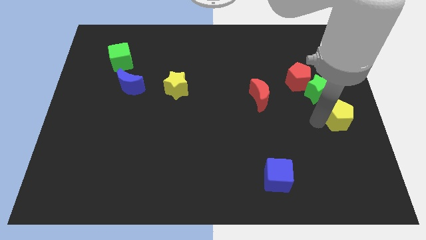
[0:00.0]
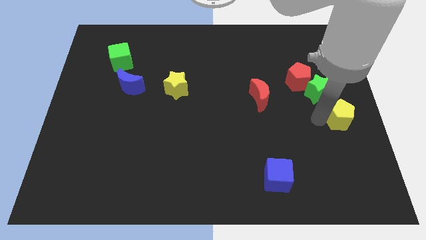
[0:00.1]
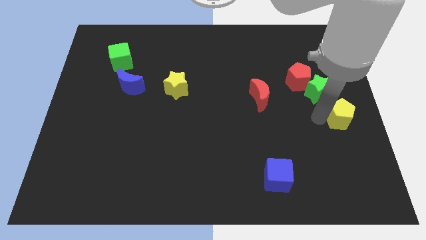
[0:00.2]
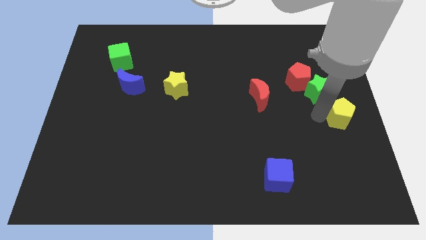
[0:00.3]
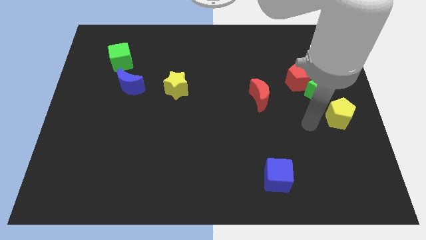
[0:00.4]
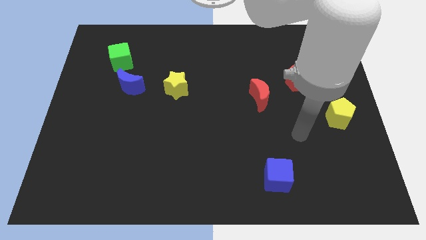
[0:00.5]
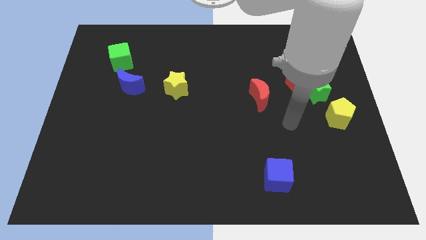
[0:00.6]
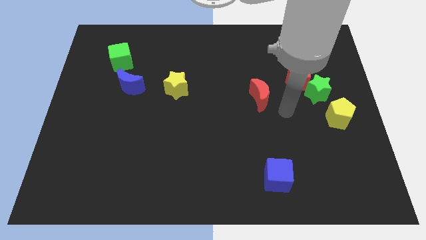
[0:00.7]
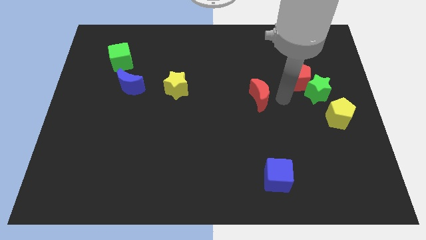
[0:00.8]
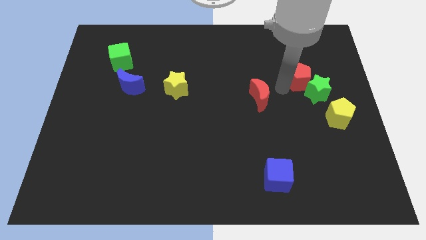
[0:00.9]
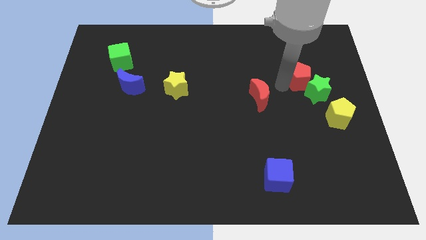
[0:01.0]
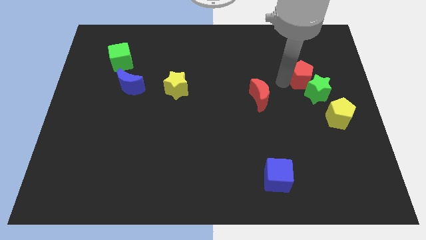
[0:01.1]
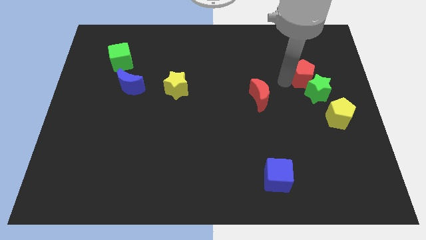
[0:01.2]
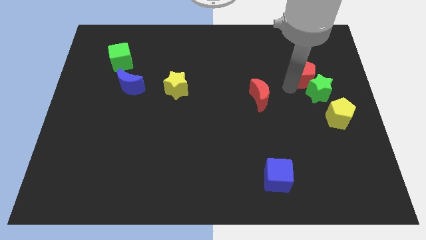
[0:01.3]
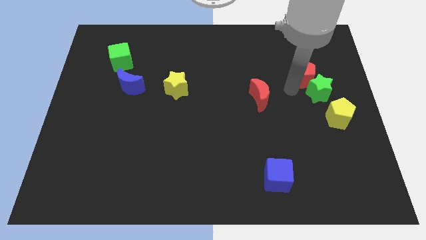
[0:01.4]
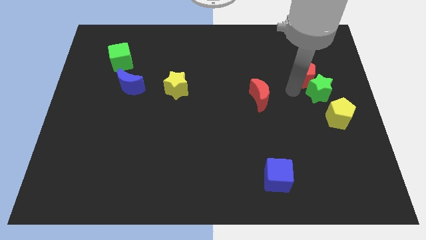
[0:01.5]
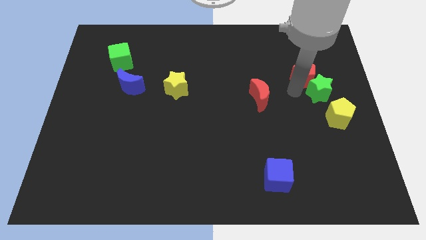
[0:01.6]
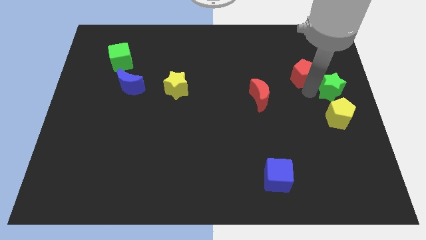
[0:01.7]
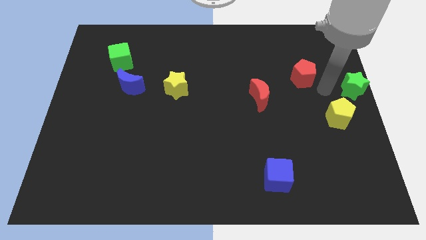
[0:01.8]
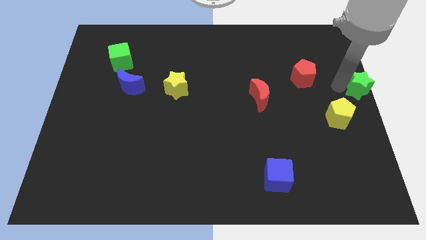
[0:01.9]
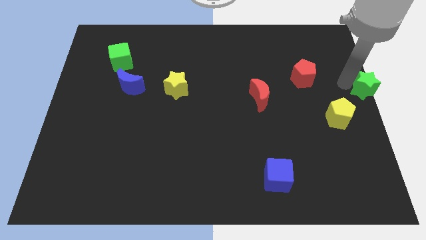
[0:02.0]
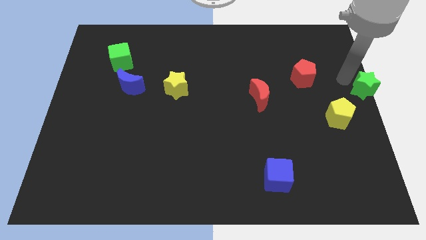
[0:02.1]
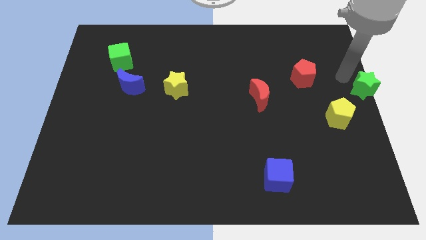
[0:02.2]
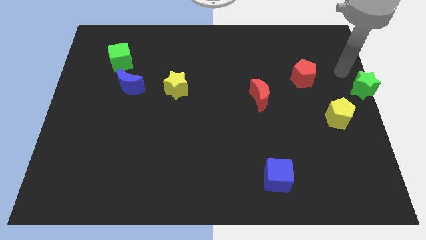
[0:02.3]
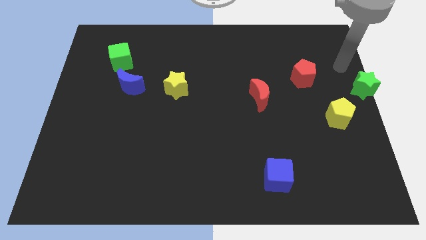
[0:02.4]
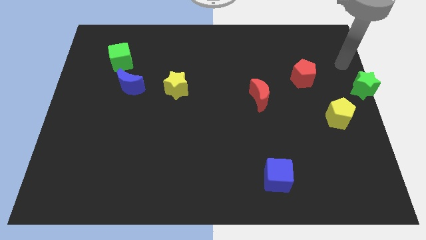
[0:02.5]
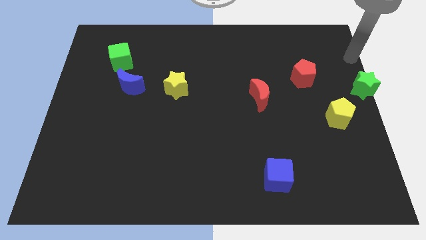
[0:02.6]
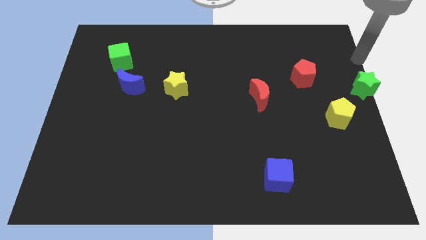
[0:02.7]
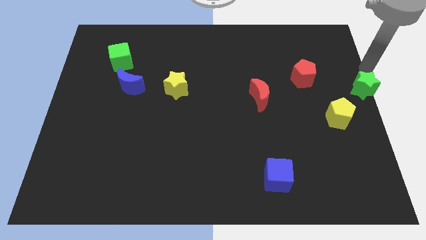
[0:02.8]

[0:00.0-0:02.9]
push the green star to the right side of the board

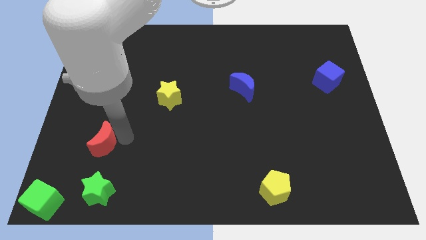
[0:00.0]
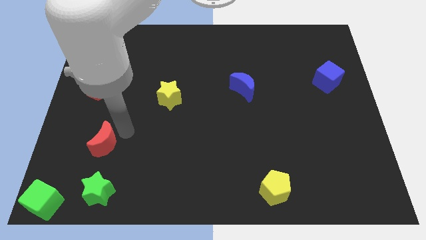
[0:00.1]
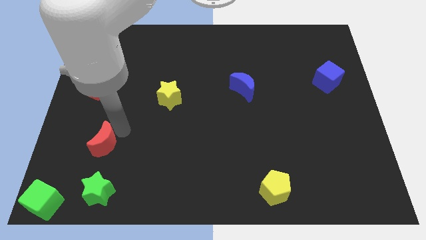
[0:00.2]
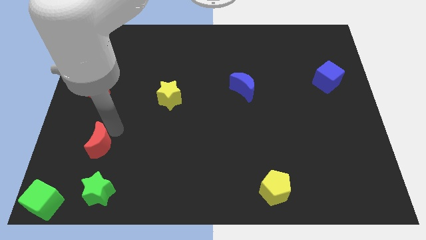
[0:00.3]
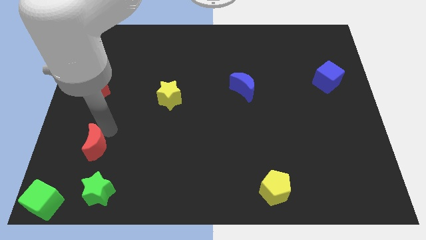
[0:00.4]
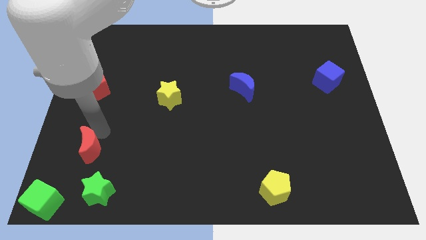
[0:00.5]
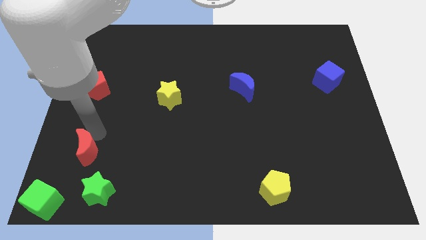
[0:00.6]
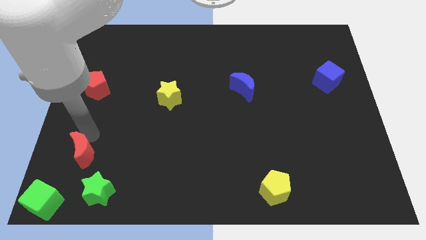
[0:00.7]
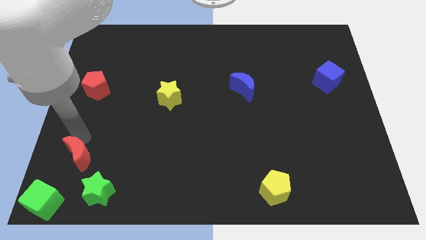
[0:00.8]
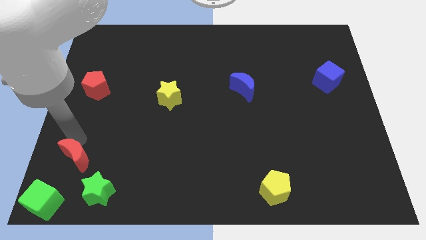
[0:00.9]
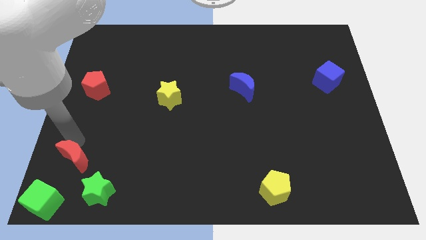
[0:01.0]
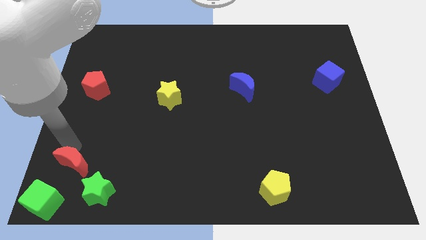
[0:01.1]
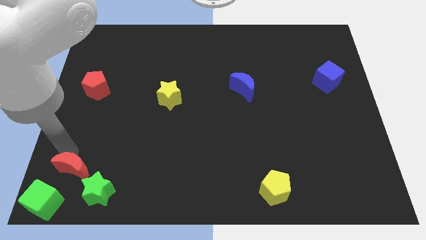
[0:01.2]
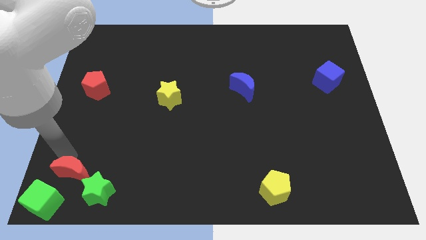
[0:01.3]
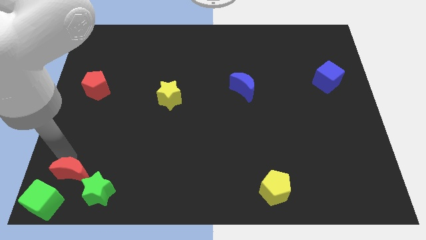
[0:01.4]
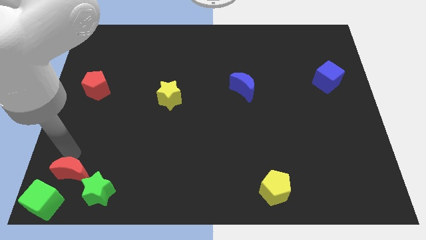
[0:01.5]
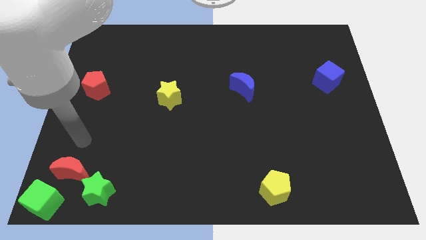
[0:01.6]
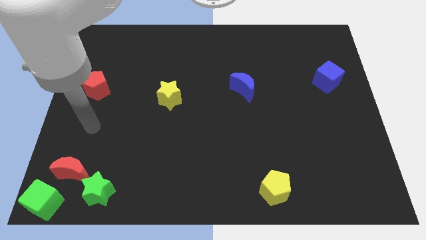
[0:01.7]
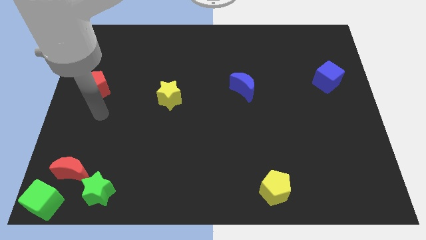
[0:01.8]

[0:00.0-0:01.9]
push the red moon towards the green cube

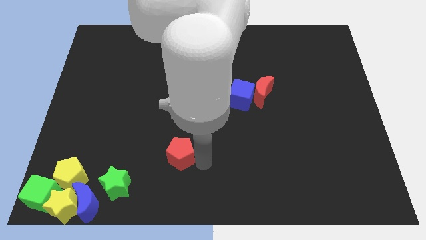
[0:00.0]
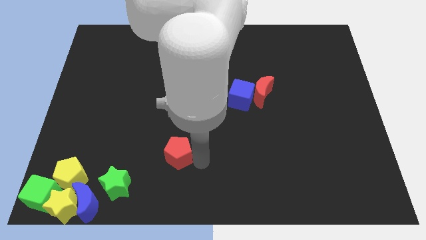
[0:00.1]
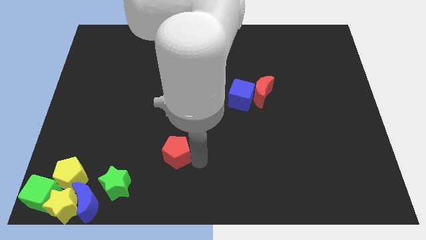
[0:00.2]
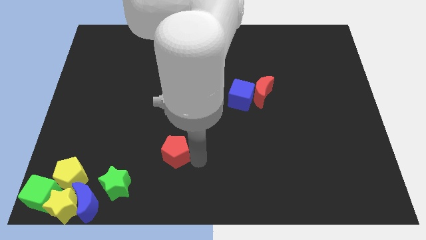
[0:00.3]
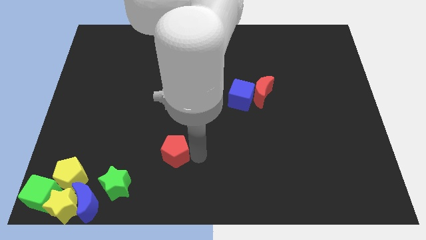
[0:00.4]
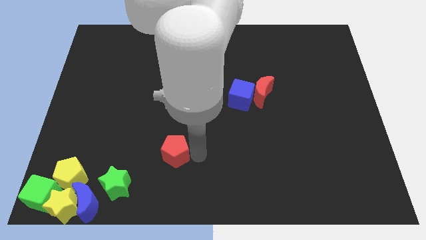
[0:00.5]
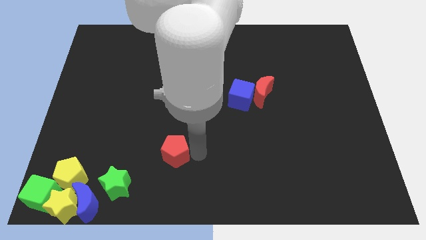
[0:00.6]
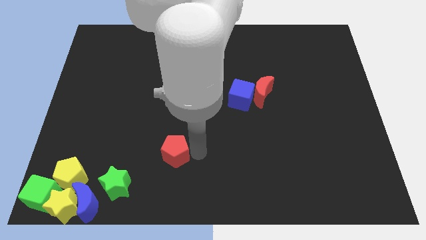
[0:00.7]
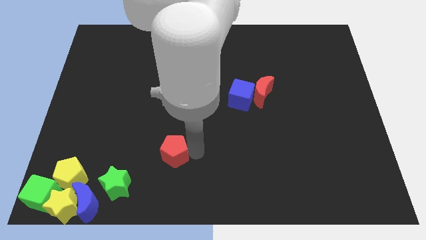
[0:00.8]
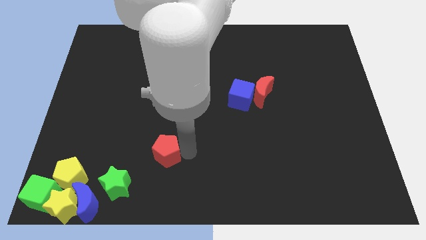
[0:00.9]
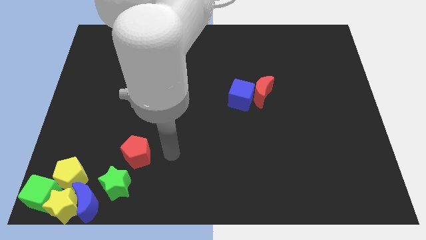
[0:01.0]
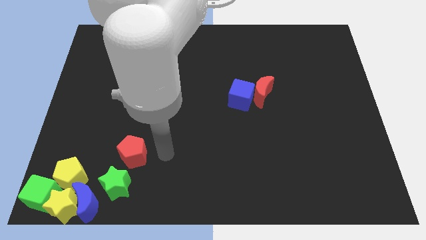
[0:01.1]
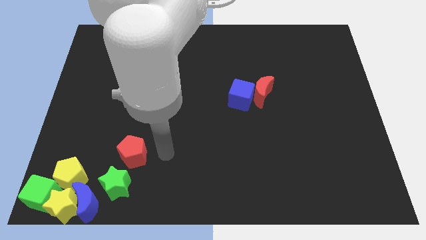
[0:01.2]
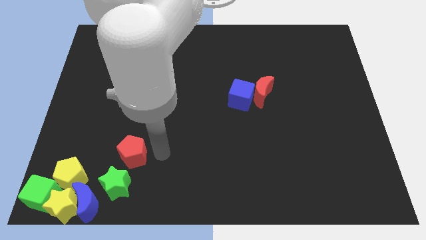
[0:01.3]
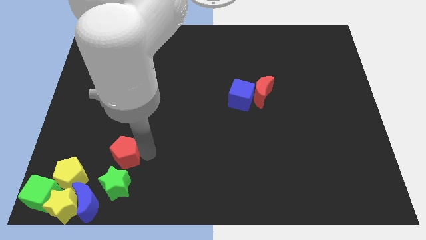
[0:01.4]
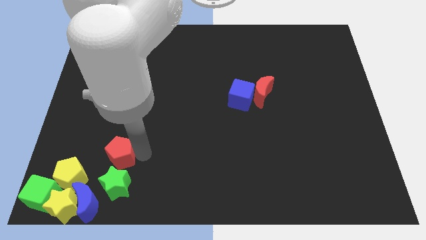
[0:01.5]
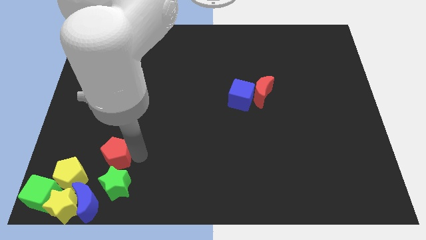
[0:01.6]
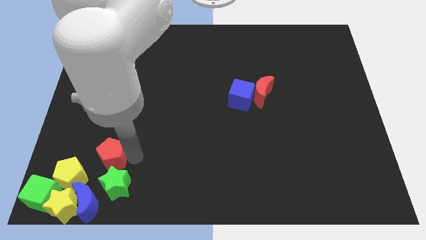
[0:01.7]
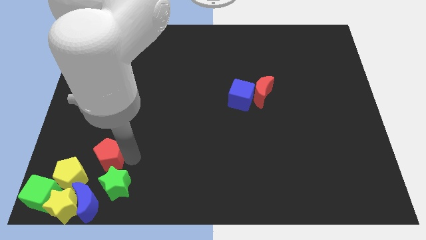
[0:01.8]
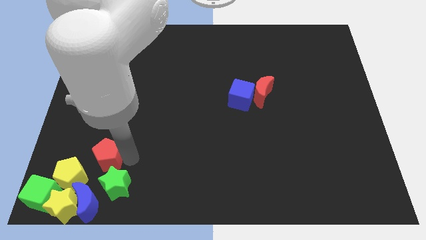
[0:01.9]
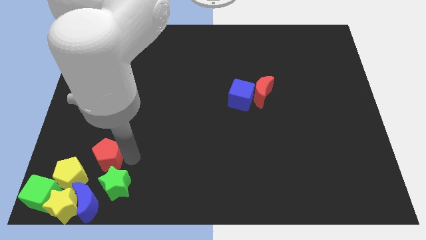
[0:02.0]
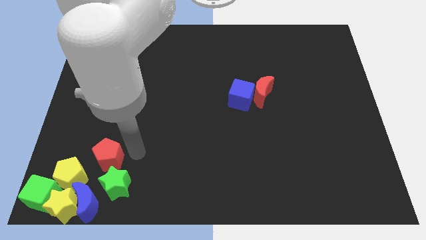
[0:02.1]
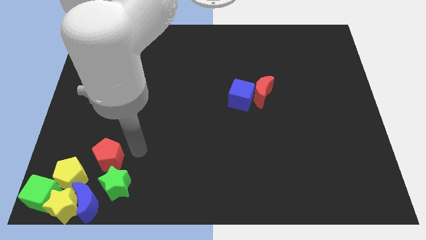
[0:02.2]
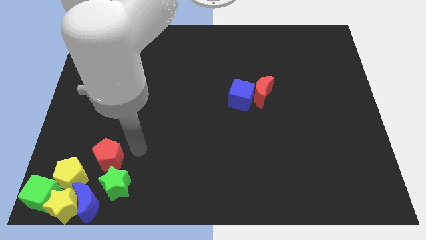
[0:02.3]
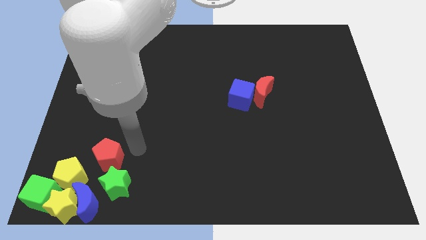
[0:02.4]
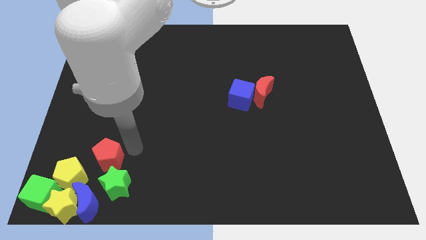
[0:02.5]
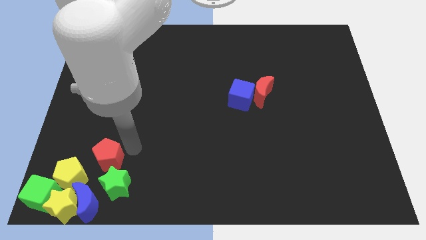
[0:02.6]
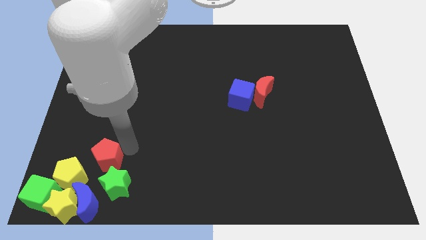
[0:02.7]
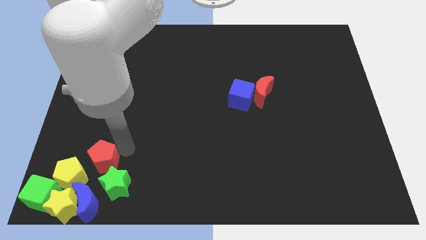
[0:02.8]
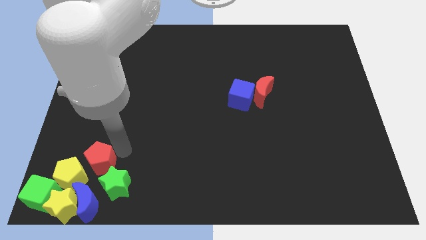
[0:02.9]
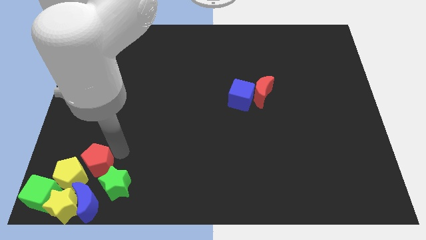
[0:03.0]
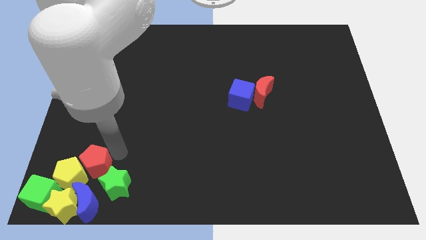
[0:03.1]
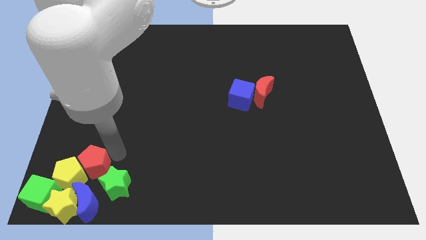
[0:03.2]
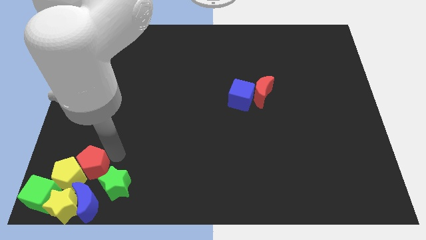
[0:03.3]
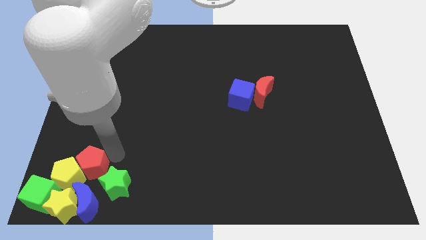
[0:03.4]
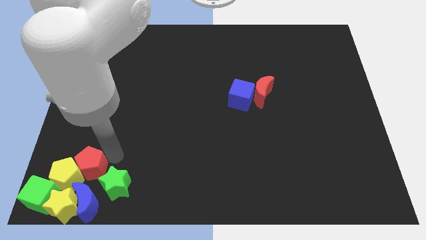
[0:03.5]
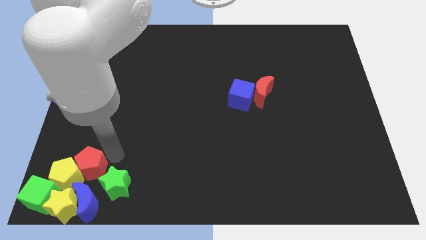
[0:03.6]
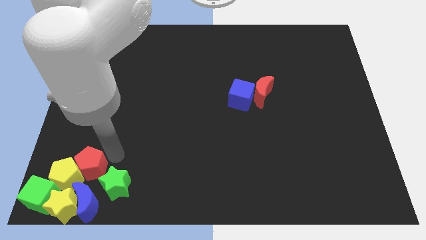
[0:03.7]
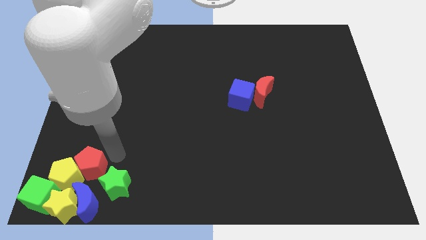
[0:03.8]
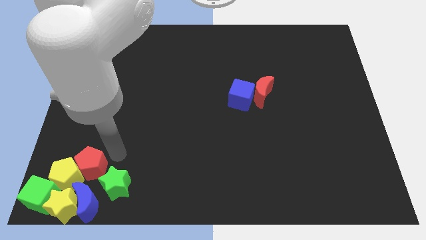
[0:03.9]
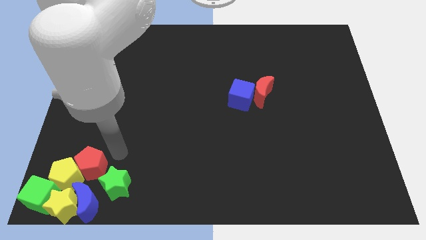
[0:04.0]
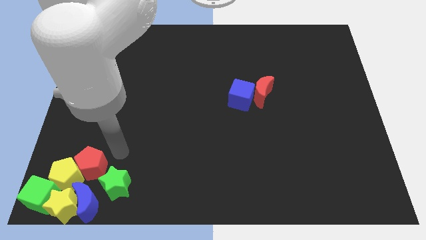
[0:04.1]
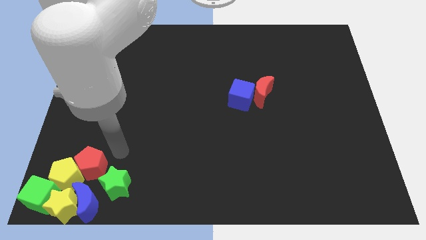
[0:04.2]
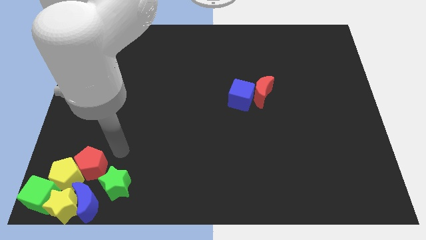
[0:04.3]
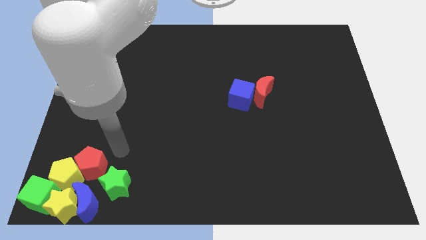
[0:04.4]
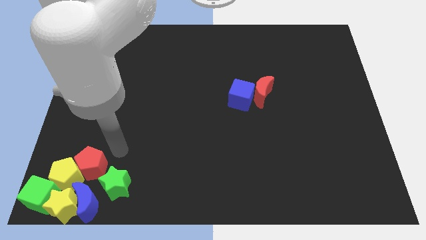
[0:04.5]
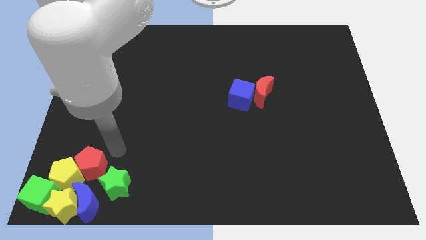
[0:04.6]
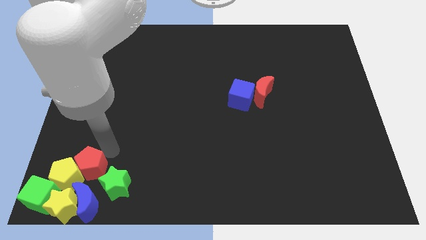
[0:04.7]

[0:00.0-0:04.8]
push the red pentagon into the yellow pentagon
